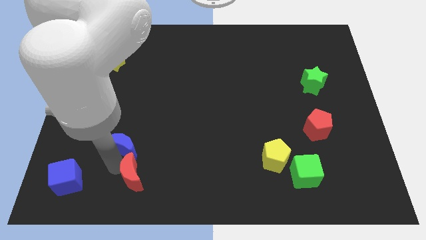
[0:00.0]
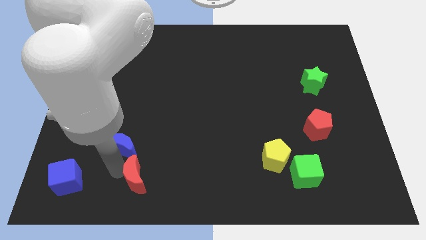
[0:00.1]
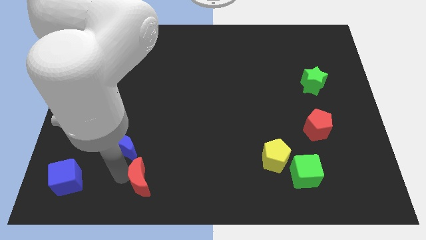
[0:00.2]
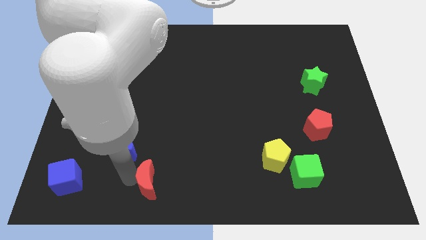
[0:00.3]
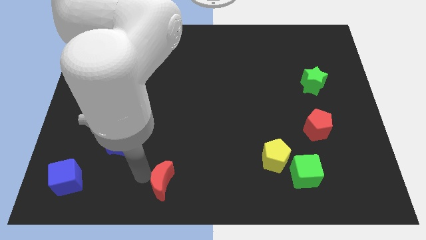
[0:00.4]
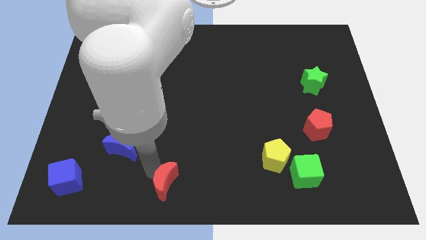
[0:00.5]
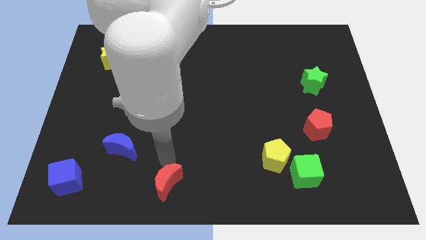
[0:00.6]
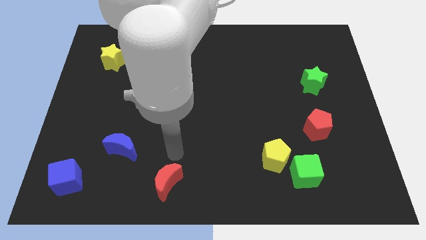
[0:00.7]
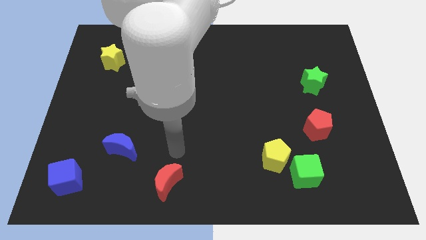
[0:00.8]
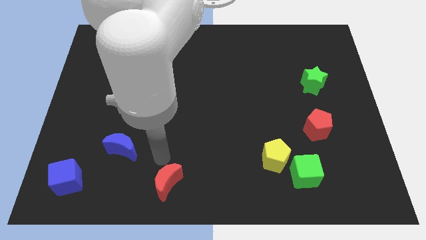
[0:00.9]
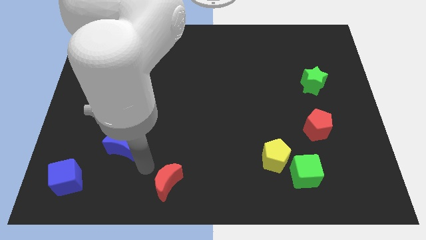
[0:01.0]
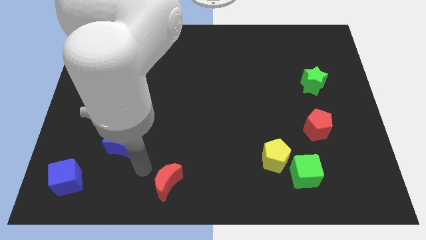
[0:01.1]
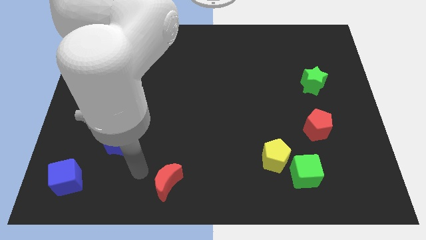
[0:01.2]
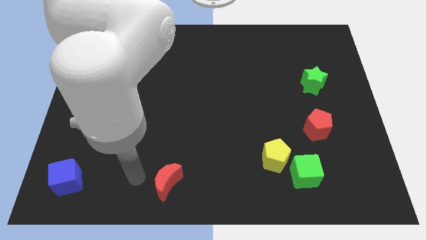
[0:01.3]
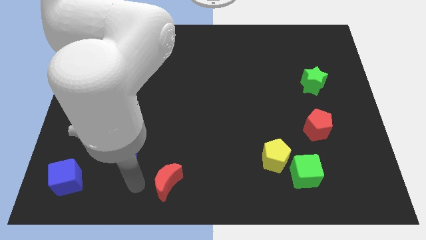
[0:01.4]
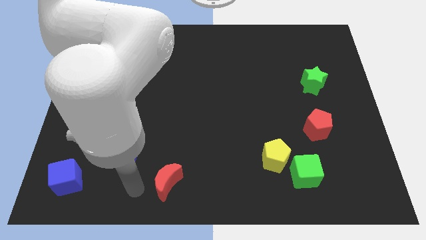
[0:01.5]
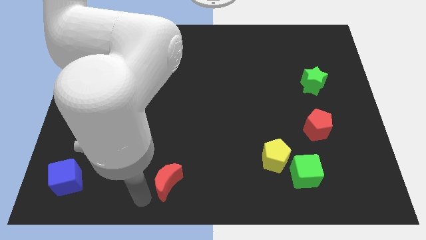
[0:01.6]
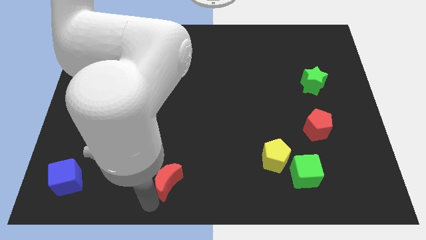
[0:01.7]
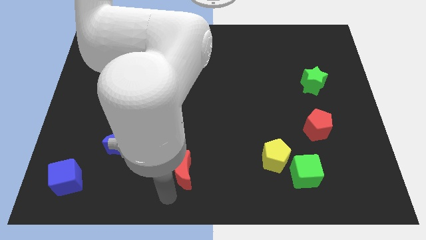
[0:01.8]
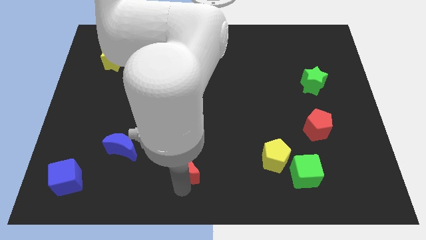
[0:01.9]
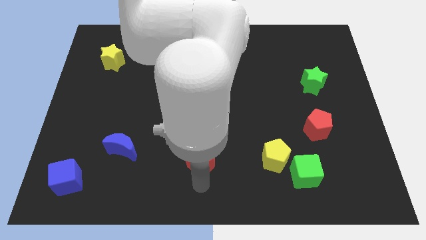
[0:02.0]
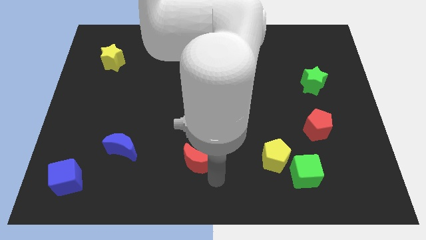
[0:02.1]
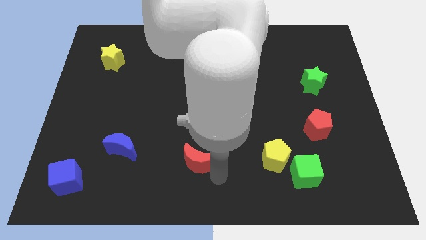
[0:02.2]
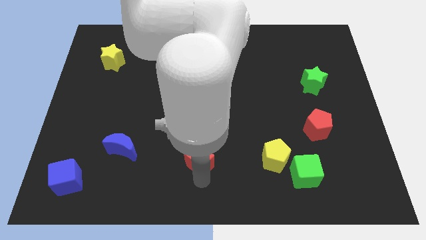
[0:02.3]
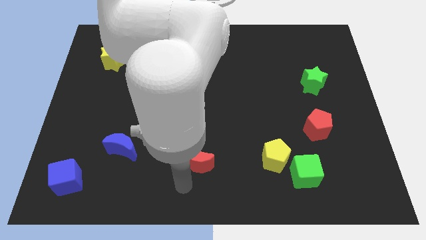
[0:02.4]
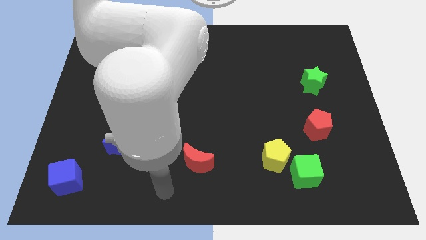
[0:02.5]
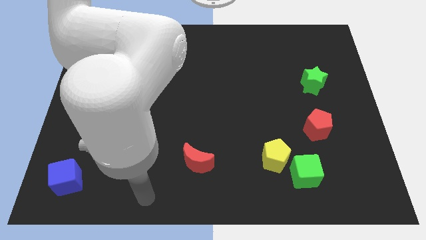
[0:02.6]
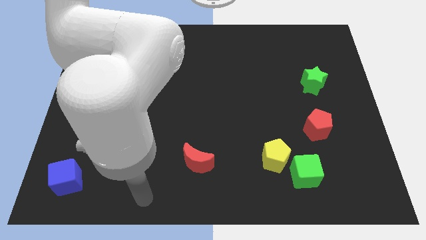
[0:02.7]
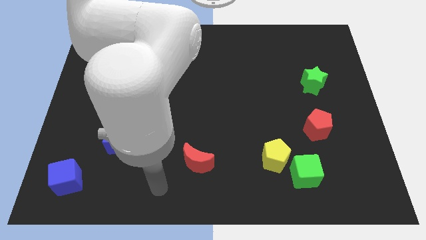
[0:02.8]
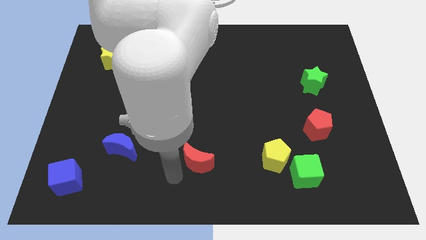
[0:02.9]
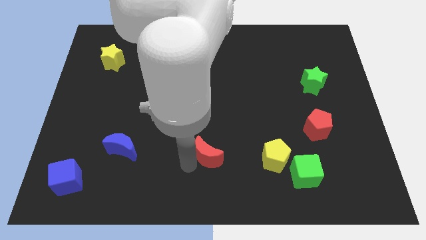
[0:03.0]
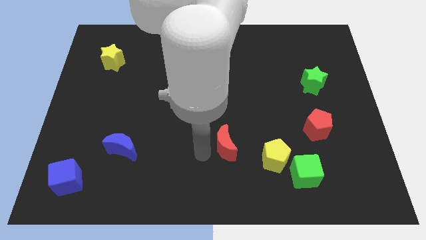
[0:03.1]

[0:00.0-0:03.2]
arrange the red moon in between the yellow pentagon and the blue crescent

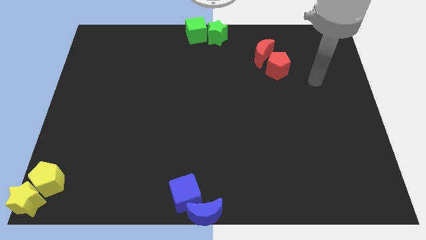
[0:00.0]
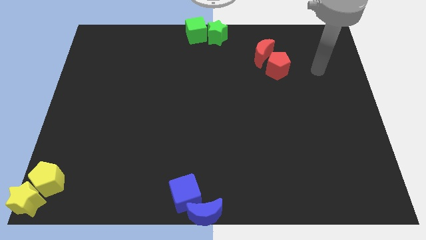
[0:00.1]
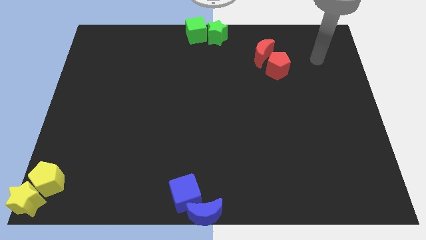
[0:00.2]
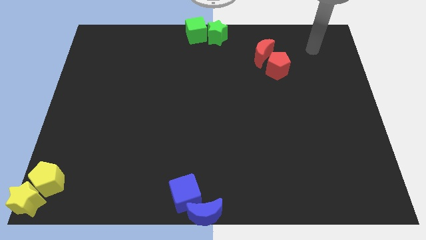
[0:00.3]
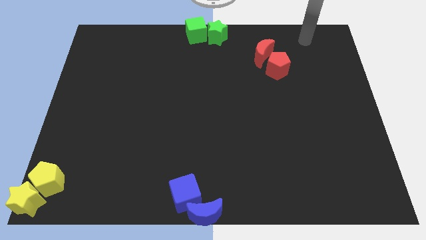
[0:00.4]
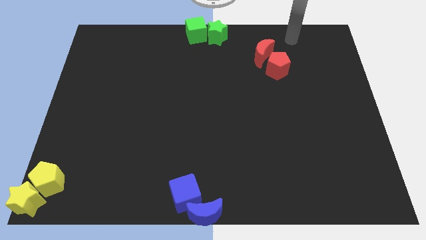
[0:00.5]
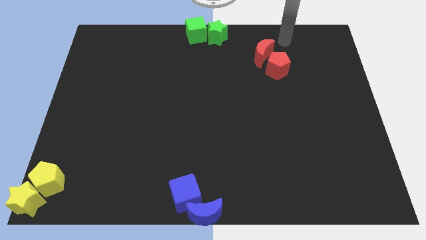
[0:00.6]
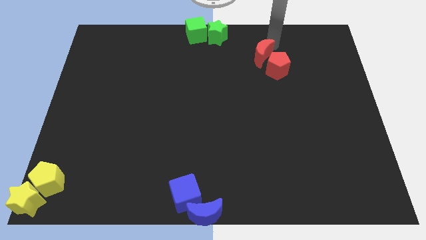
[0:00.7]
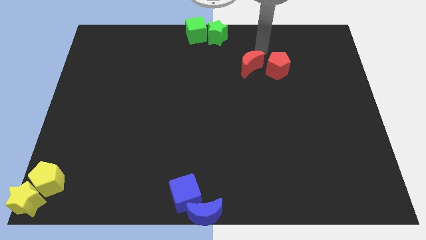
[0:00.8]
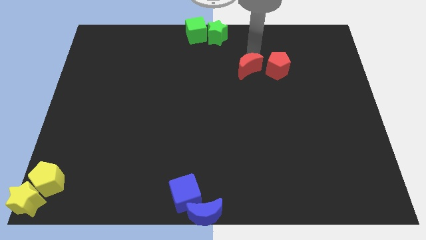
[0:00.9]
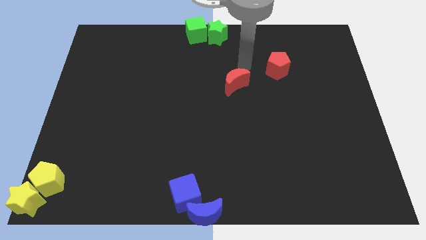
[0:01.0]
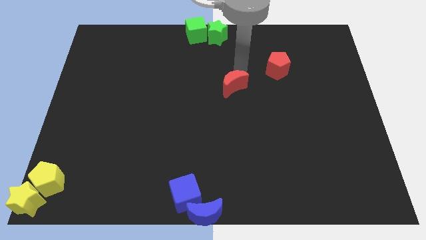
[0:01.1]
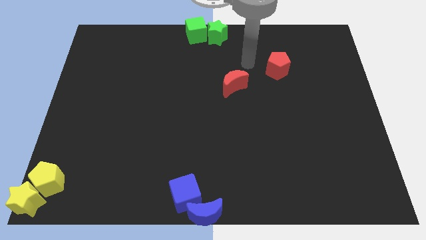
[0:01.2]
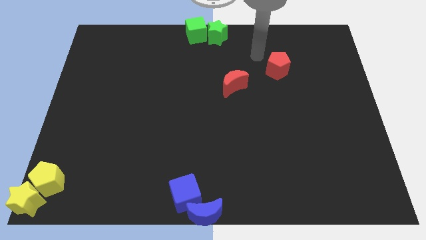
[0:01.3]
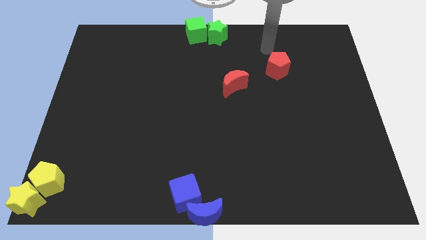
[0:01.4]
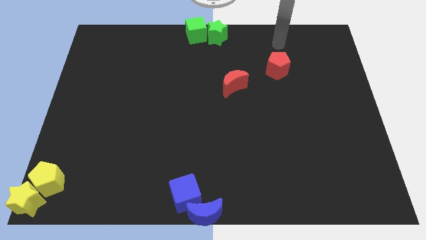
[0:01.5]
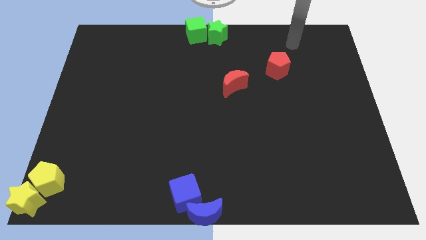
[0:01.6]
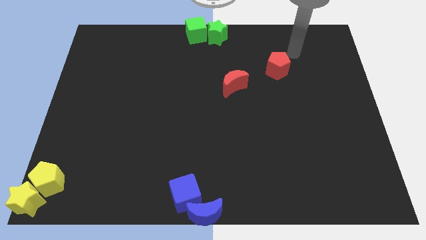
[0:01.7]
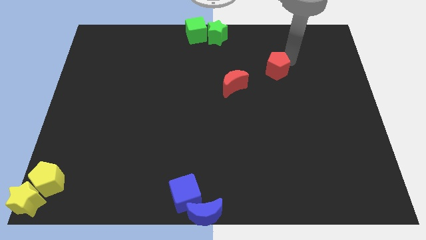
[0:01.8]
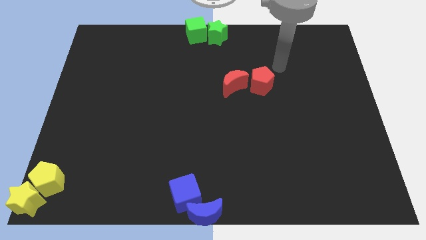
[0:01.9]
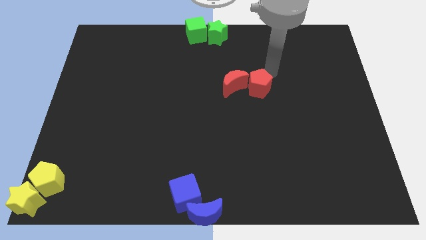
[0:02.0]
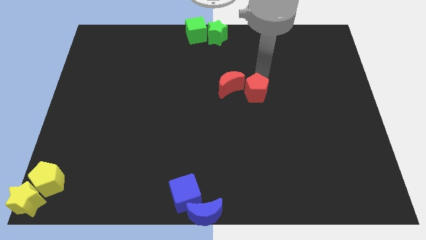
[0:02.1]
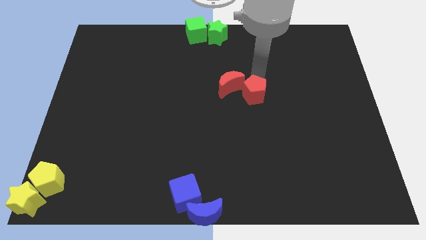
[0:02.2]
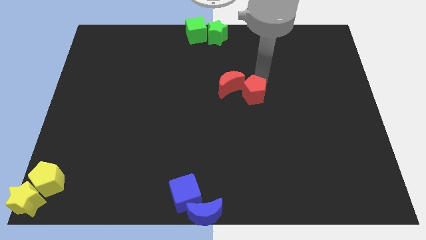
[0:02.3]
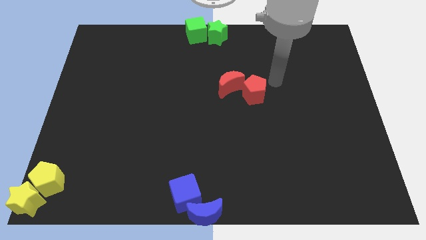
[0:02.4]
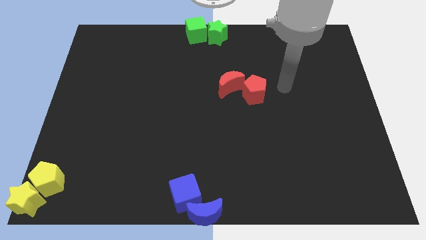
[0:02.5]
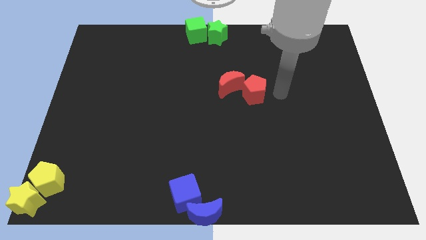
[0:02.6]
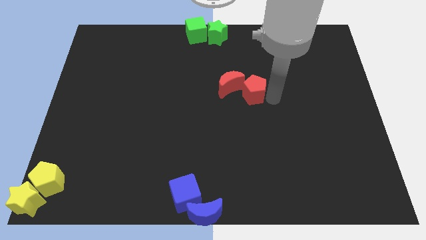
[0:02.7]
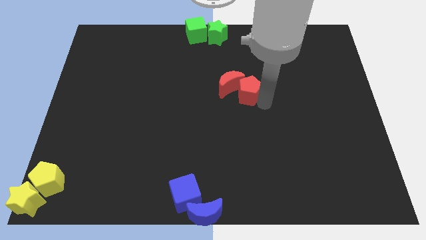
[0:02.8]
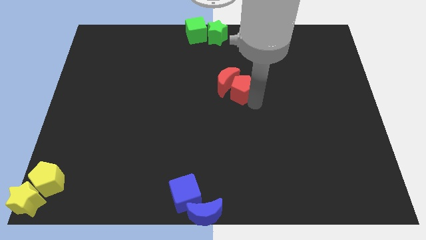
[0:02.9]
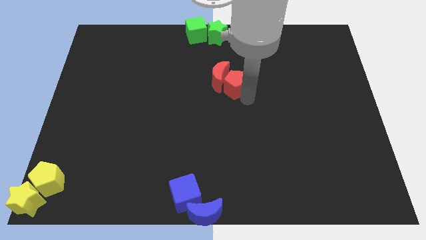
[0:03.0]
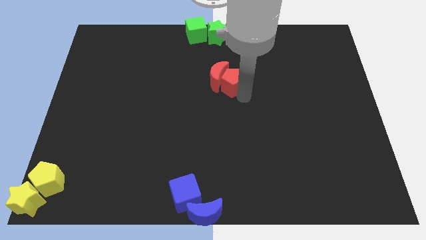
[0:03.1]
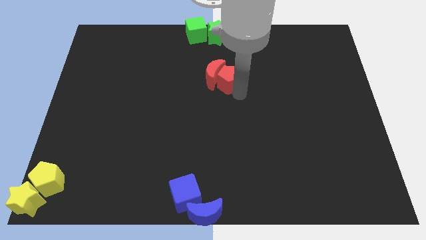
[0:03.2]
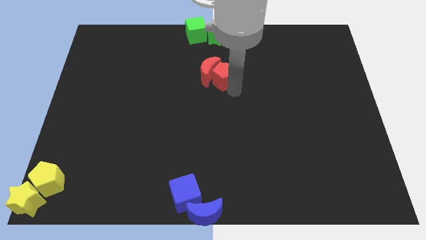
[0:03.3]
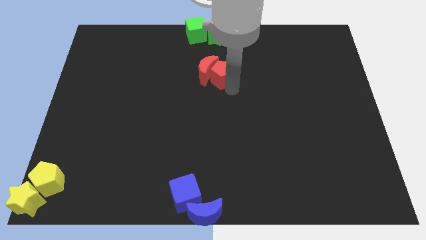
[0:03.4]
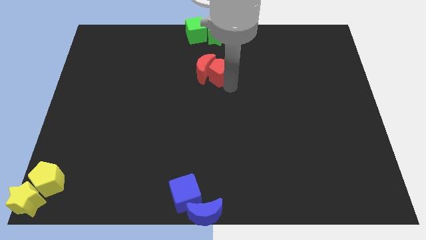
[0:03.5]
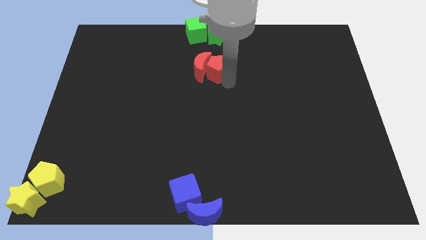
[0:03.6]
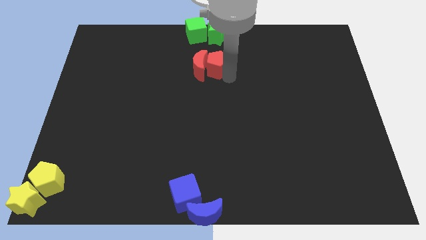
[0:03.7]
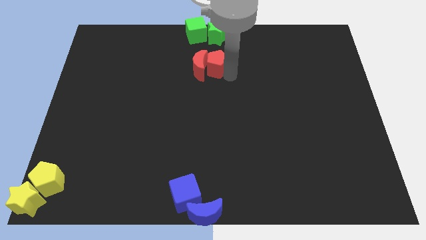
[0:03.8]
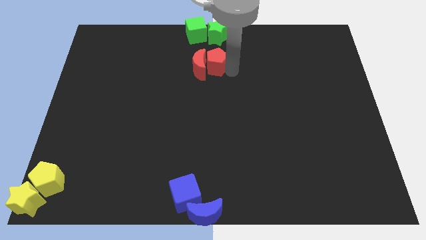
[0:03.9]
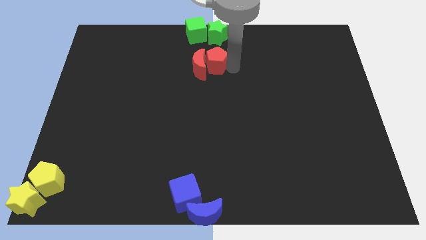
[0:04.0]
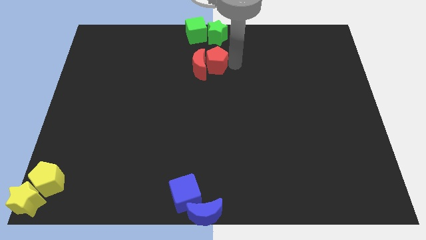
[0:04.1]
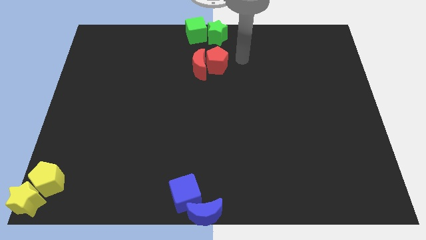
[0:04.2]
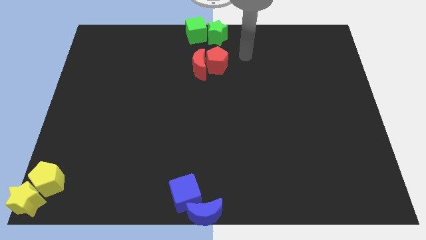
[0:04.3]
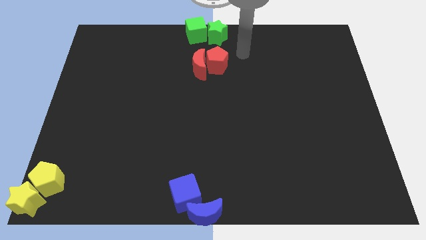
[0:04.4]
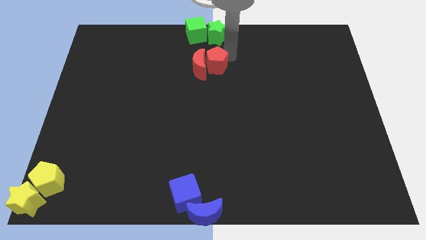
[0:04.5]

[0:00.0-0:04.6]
push the red crescent and red pentagon to the top center of the board

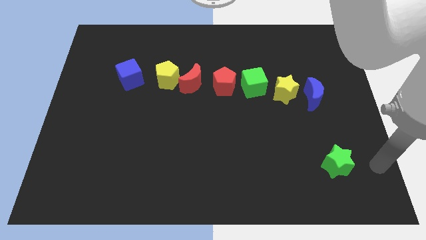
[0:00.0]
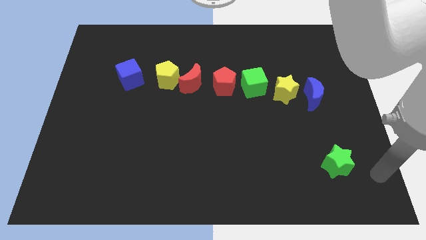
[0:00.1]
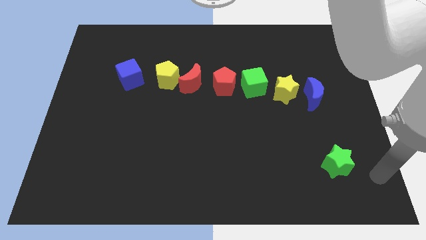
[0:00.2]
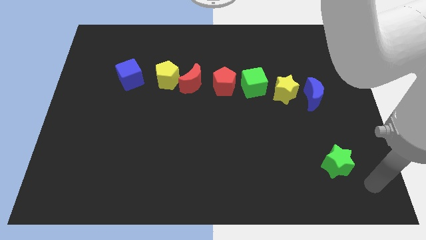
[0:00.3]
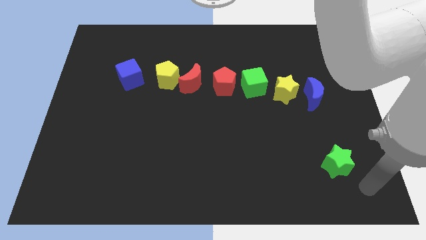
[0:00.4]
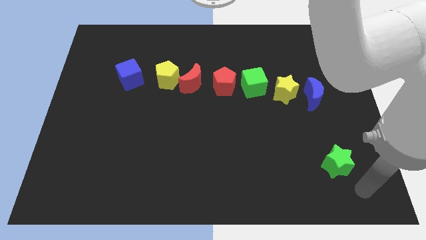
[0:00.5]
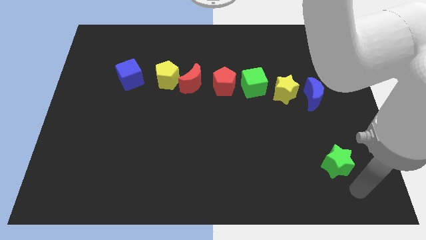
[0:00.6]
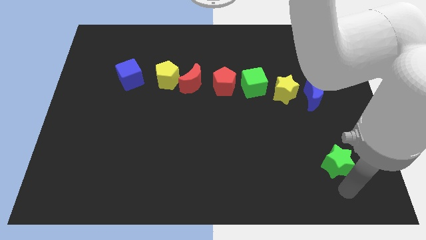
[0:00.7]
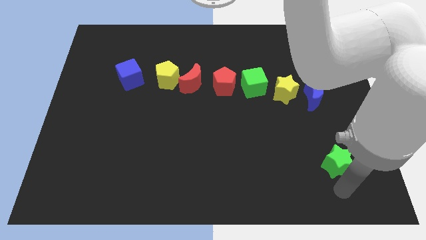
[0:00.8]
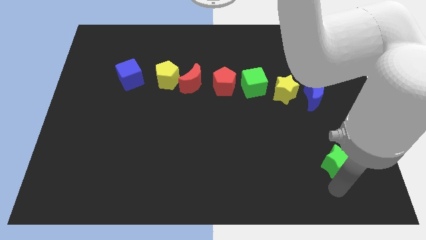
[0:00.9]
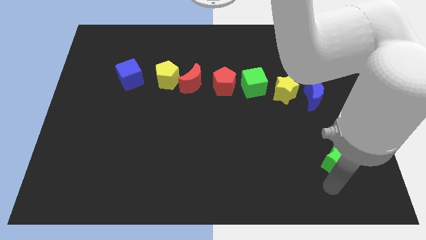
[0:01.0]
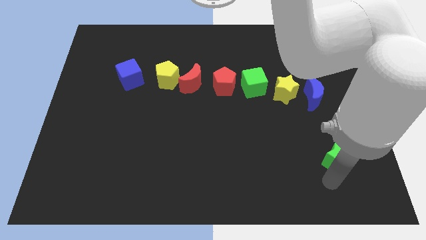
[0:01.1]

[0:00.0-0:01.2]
touch the bottom side of the green star
